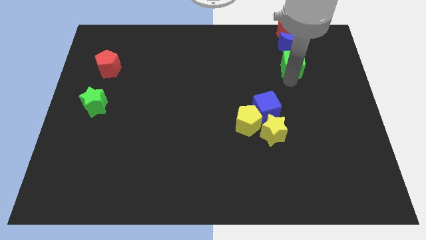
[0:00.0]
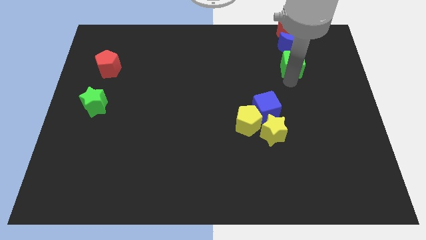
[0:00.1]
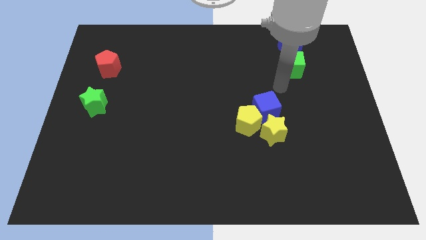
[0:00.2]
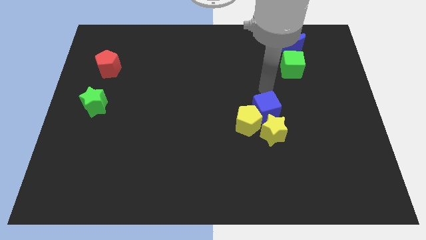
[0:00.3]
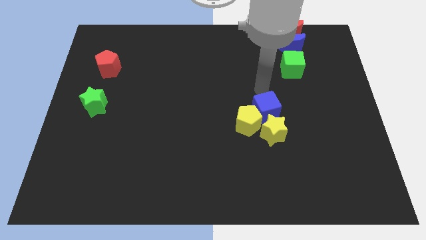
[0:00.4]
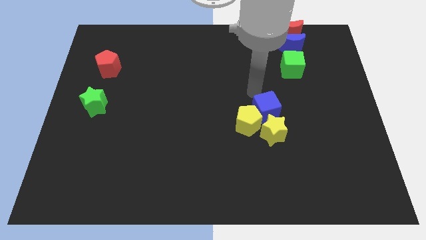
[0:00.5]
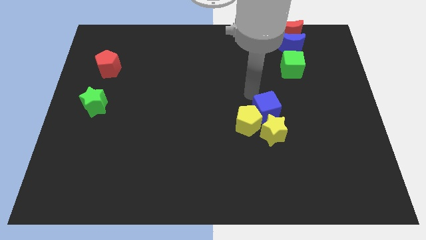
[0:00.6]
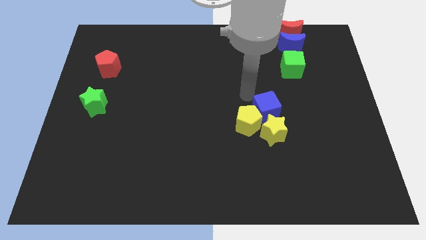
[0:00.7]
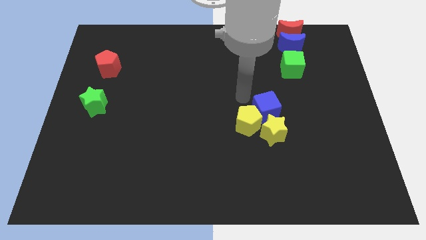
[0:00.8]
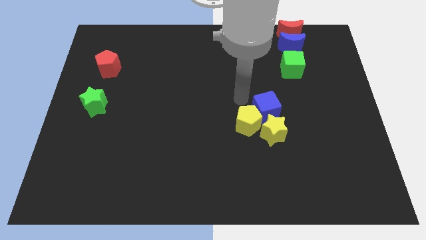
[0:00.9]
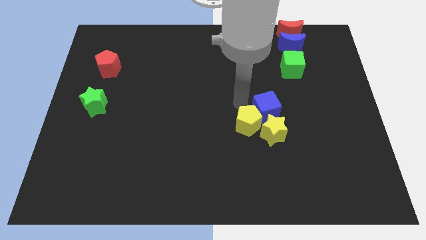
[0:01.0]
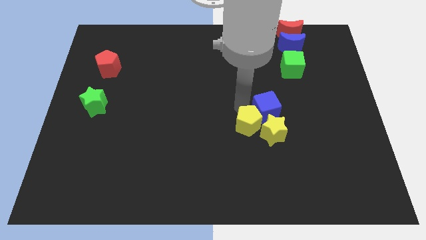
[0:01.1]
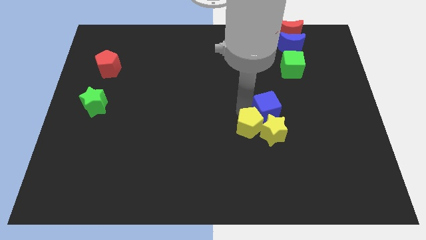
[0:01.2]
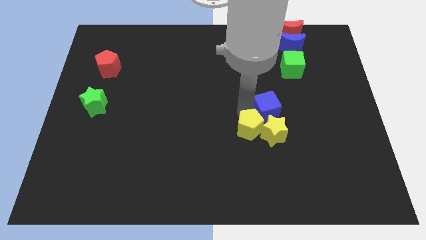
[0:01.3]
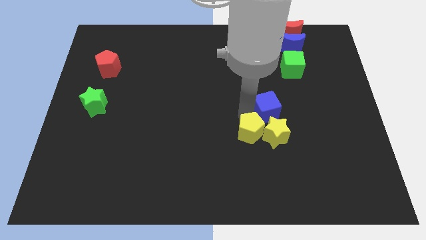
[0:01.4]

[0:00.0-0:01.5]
place your arm to the left of the blue cube

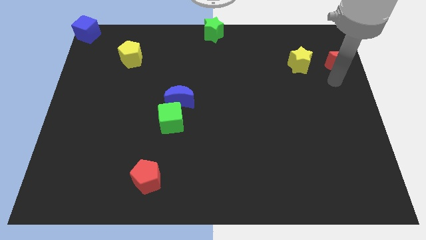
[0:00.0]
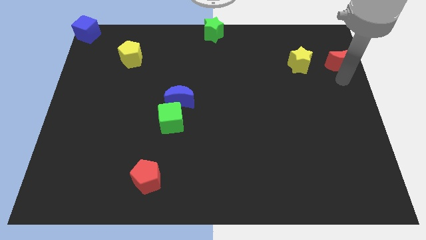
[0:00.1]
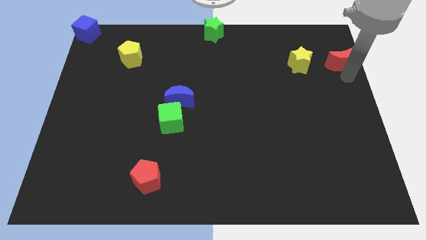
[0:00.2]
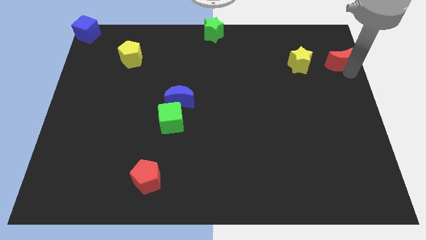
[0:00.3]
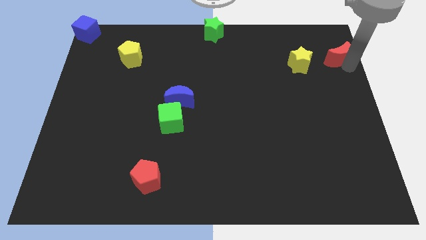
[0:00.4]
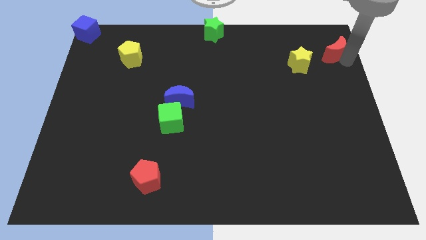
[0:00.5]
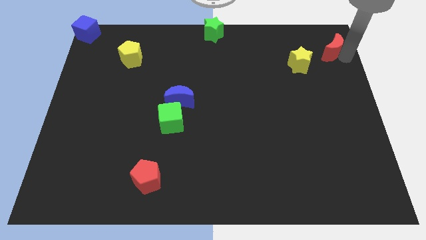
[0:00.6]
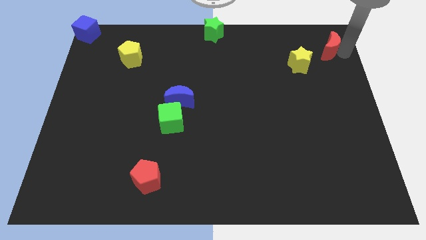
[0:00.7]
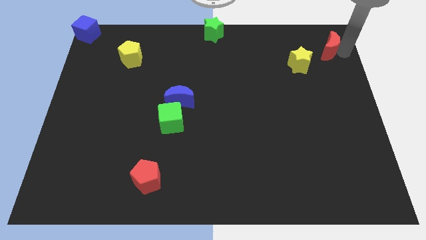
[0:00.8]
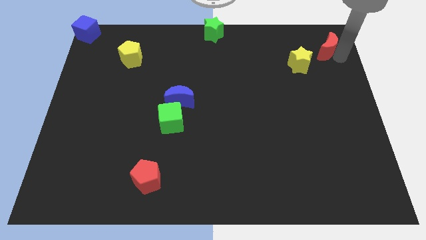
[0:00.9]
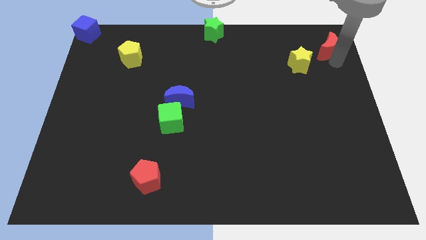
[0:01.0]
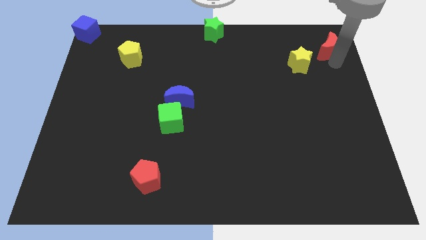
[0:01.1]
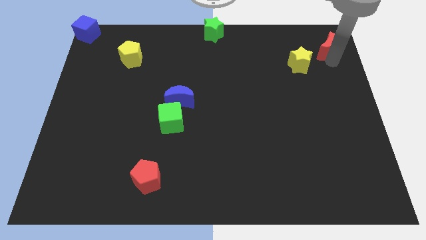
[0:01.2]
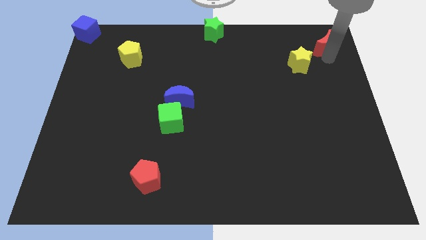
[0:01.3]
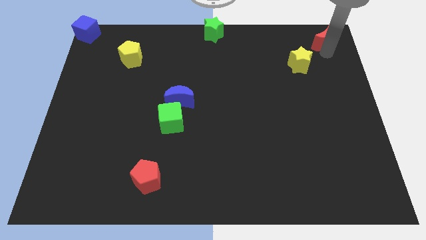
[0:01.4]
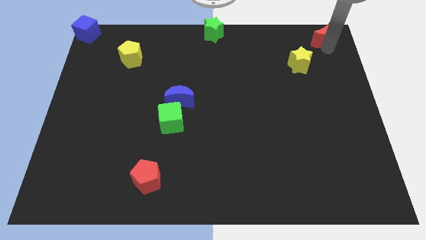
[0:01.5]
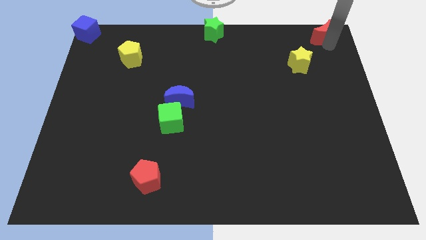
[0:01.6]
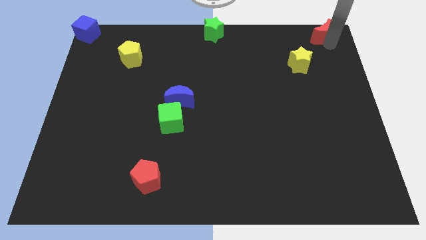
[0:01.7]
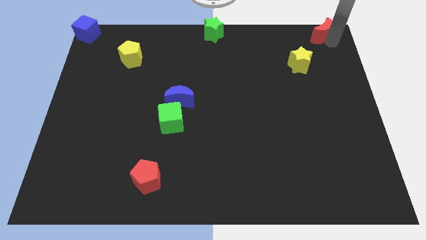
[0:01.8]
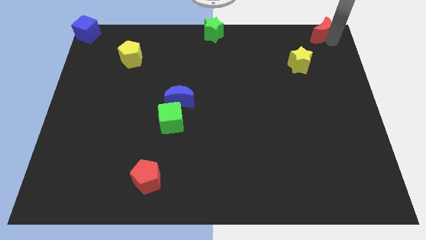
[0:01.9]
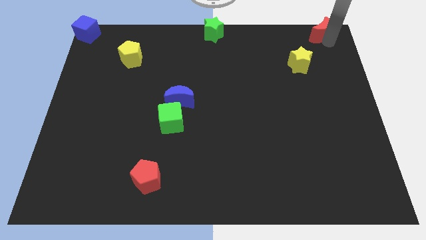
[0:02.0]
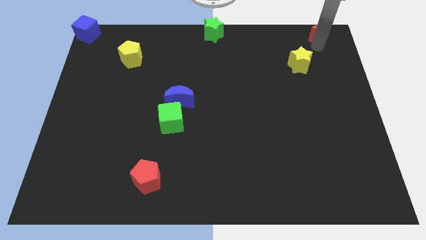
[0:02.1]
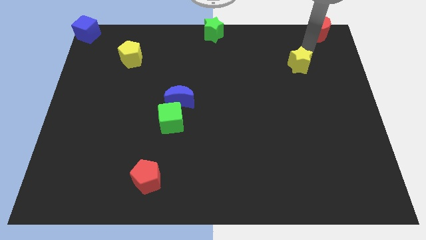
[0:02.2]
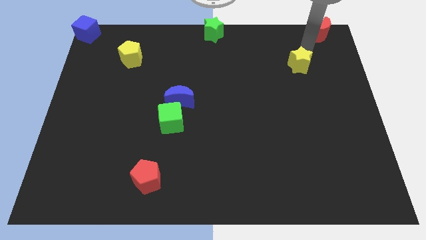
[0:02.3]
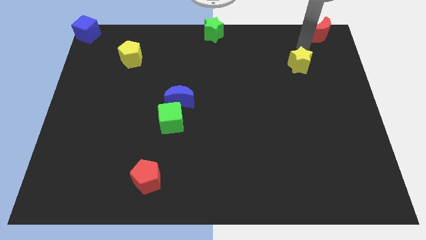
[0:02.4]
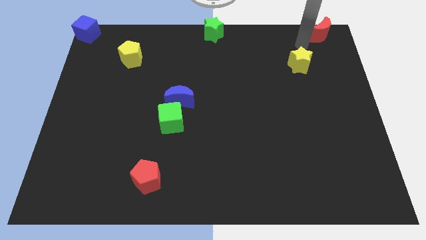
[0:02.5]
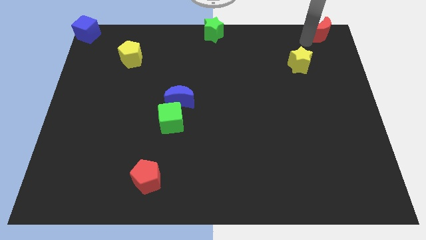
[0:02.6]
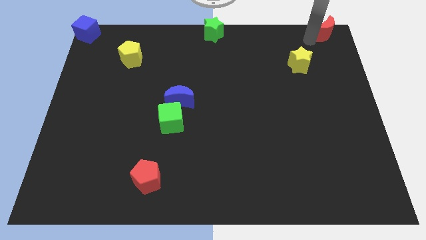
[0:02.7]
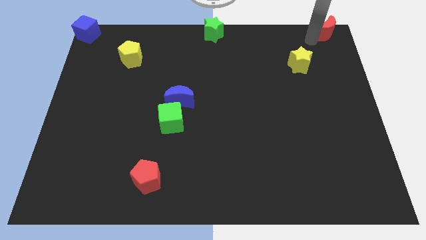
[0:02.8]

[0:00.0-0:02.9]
place the red crescent at top right corner of the board

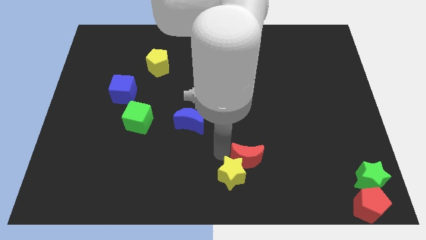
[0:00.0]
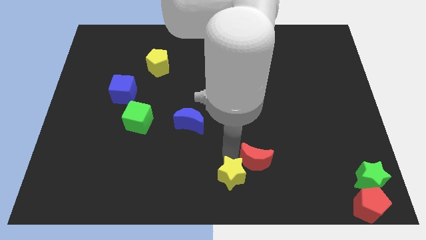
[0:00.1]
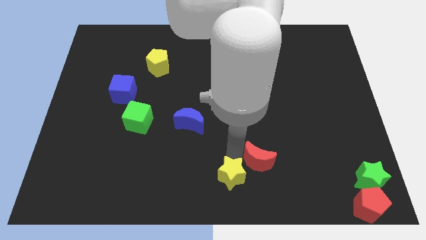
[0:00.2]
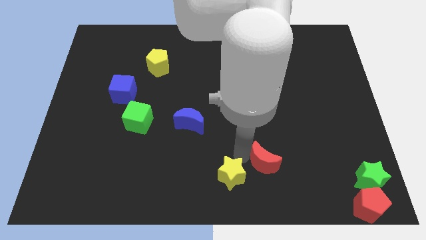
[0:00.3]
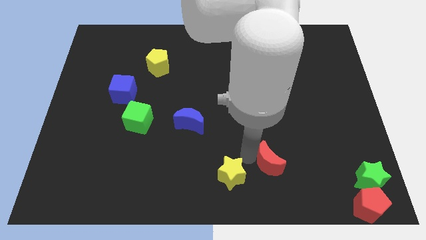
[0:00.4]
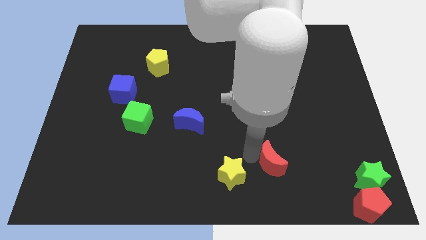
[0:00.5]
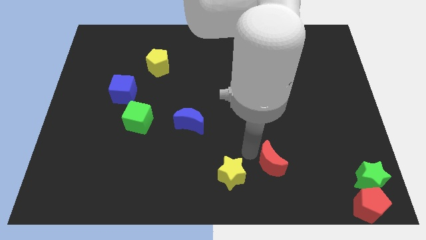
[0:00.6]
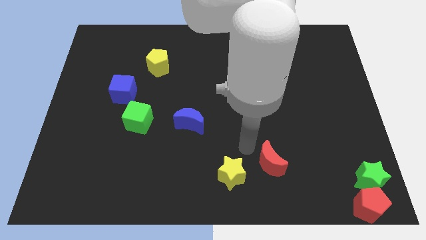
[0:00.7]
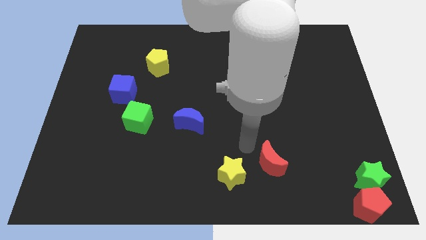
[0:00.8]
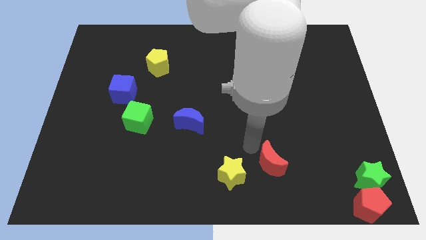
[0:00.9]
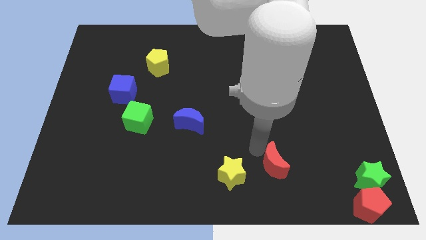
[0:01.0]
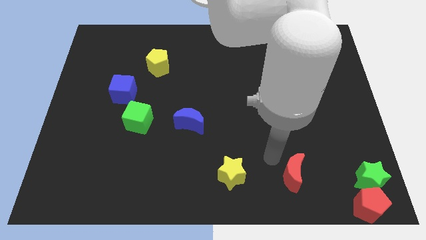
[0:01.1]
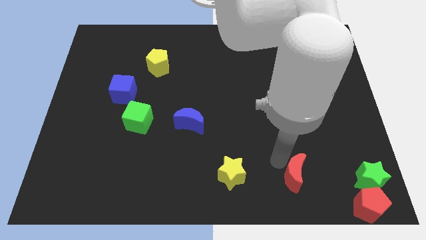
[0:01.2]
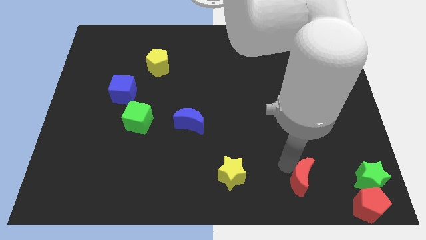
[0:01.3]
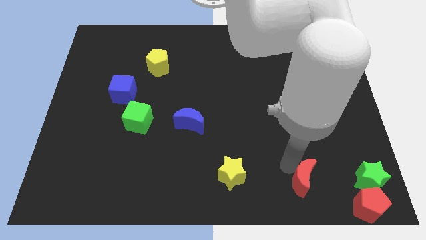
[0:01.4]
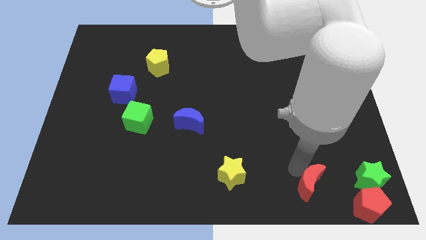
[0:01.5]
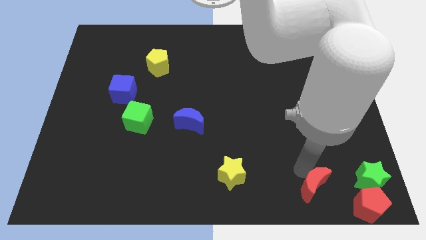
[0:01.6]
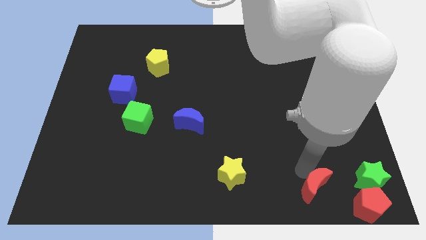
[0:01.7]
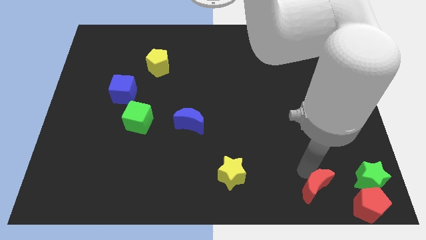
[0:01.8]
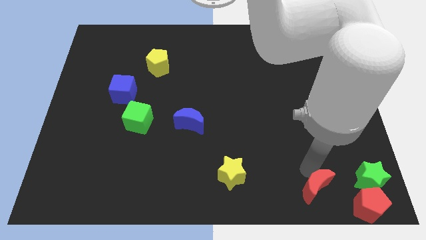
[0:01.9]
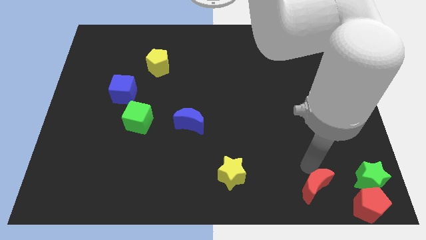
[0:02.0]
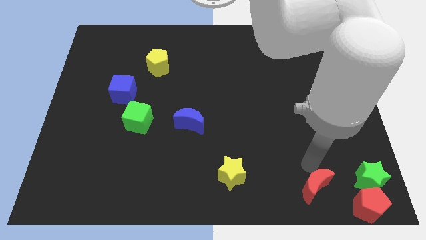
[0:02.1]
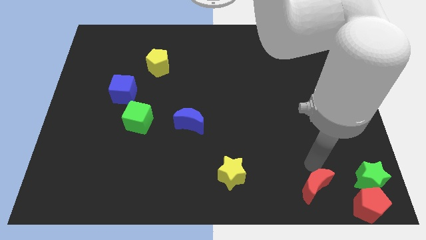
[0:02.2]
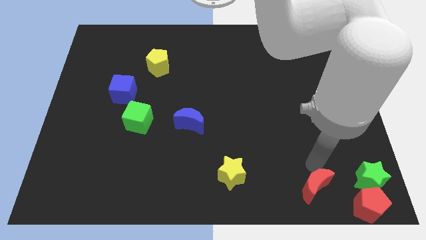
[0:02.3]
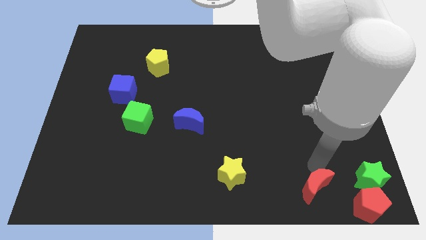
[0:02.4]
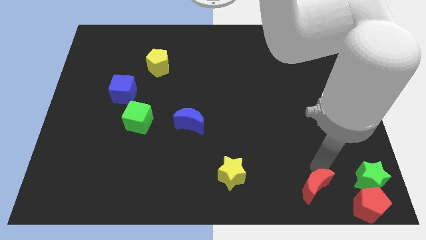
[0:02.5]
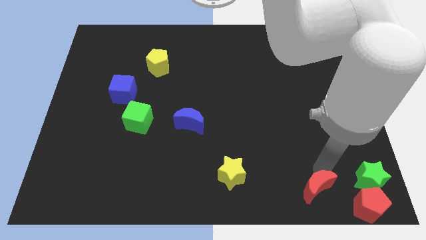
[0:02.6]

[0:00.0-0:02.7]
push red crescent closer to the red pentagon

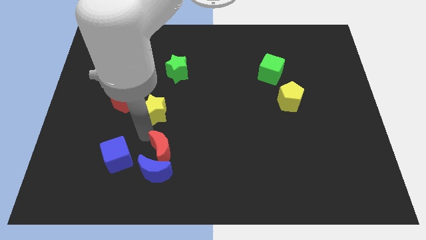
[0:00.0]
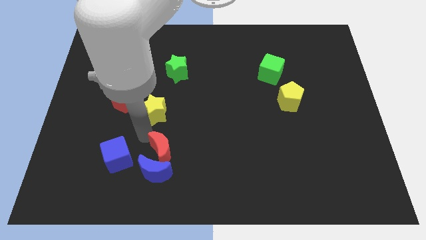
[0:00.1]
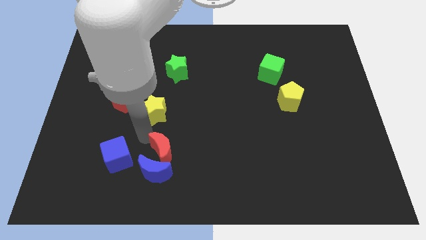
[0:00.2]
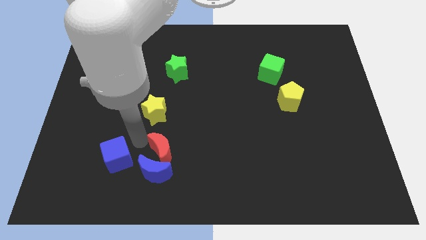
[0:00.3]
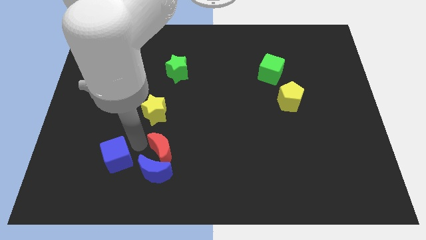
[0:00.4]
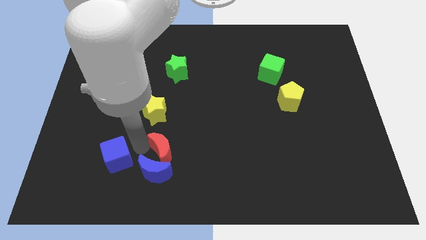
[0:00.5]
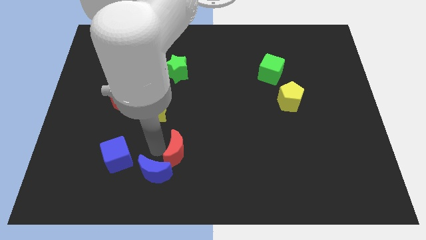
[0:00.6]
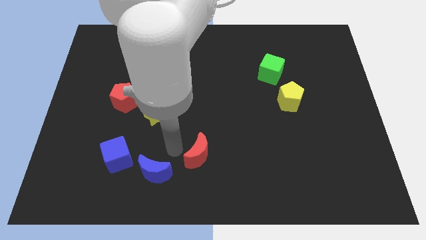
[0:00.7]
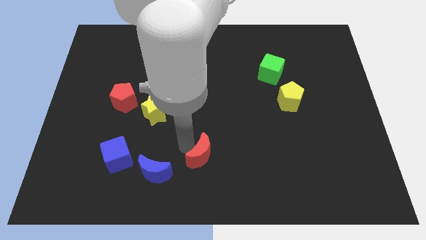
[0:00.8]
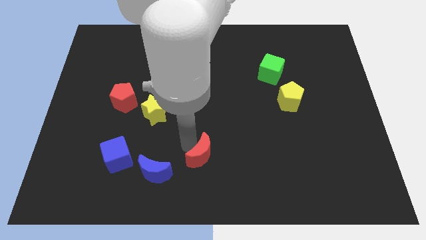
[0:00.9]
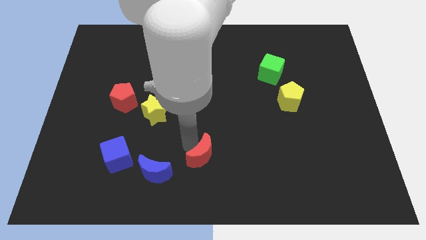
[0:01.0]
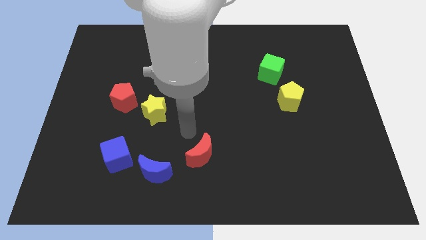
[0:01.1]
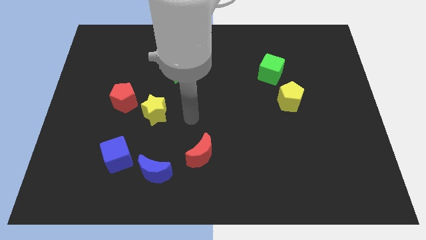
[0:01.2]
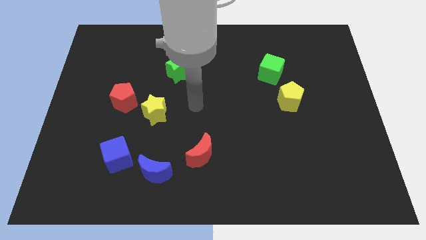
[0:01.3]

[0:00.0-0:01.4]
push the red moon to the right side of the blue moon

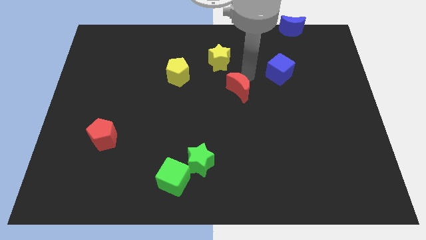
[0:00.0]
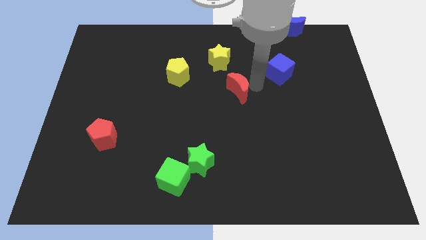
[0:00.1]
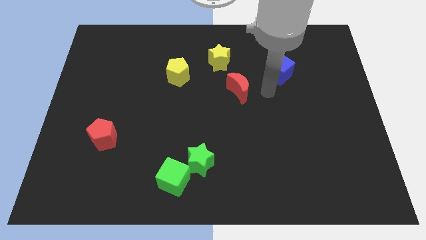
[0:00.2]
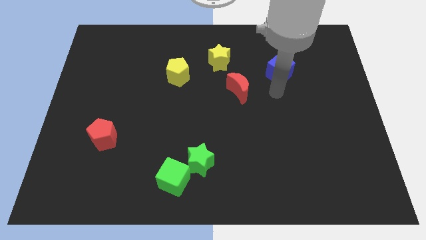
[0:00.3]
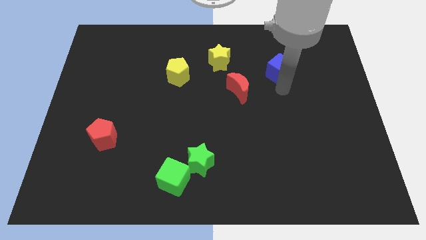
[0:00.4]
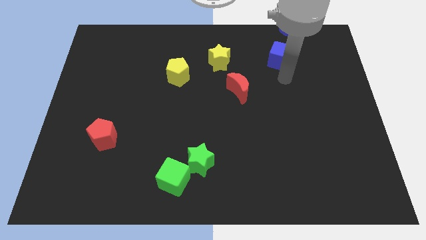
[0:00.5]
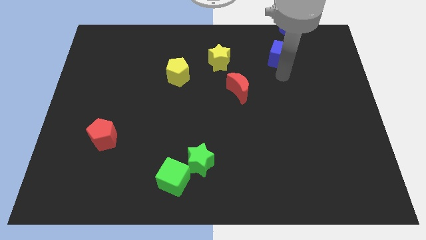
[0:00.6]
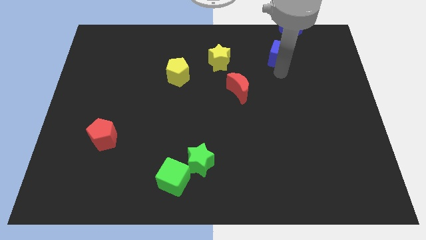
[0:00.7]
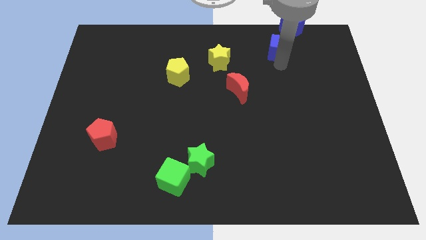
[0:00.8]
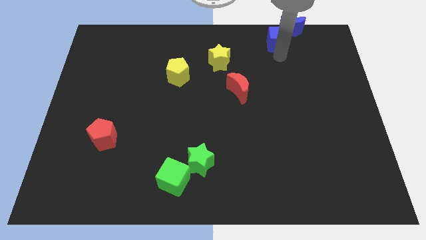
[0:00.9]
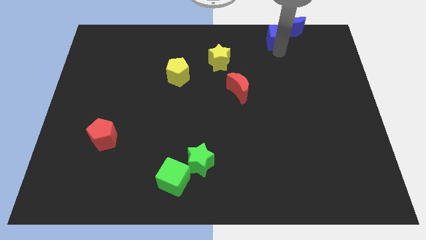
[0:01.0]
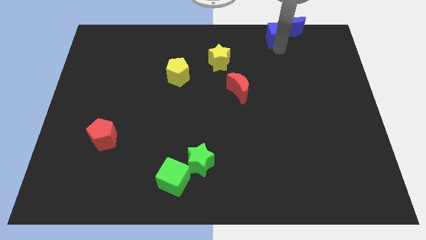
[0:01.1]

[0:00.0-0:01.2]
push the blue cube diagonally top right to the yellow star
